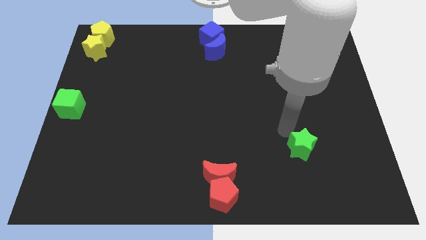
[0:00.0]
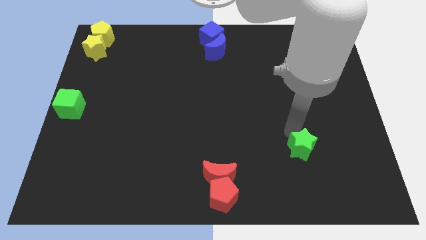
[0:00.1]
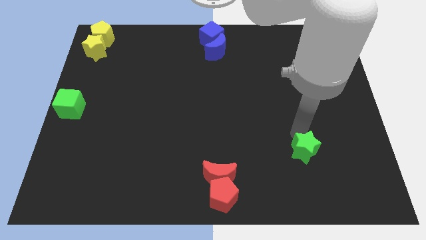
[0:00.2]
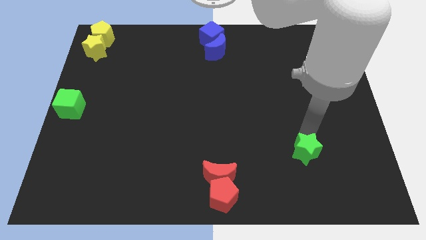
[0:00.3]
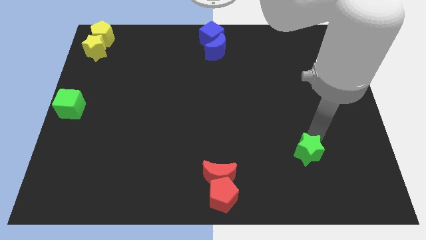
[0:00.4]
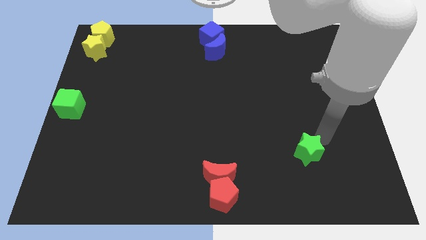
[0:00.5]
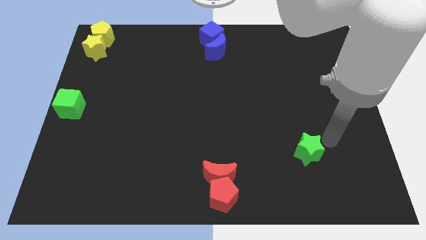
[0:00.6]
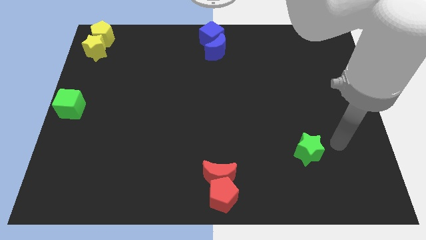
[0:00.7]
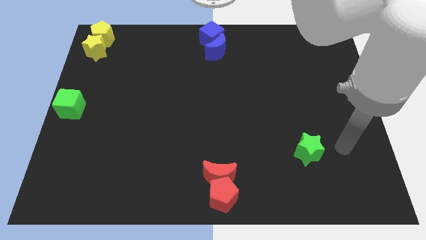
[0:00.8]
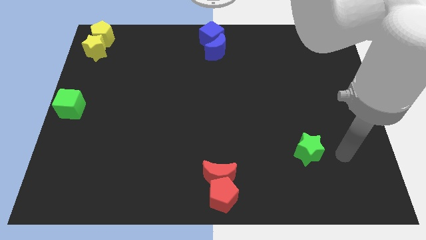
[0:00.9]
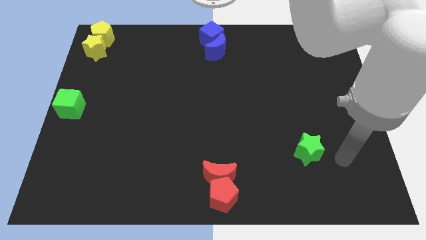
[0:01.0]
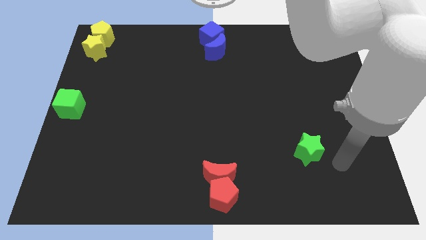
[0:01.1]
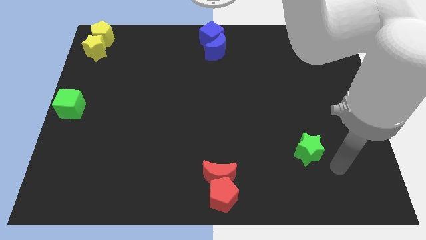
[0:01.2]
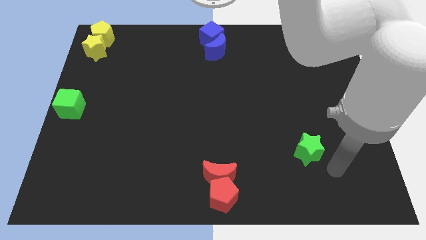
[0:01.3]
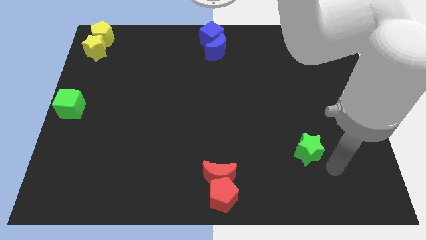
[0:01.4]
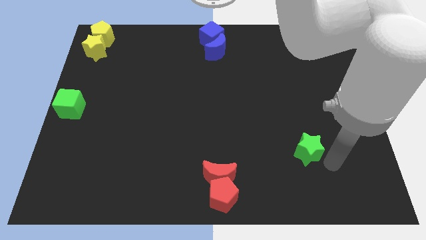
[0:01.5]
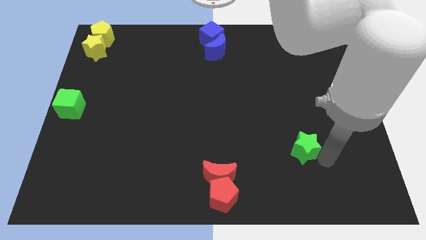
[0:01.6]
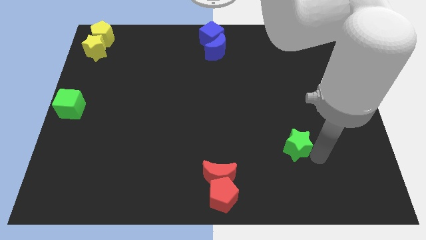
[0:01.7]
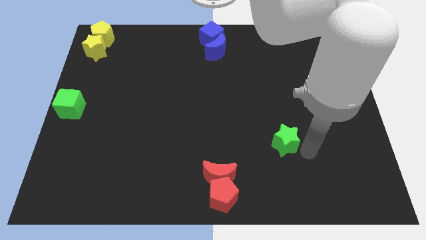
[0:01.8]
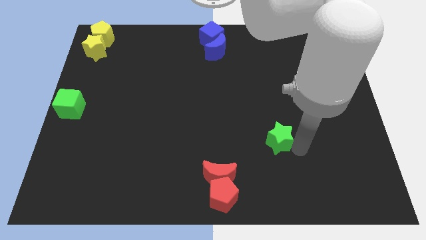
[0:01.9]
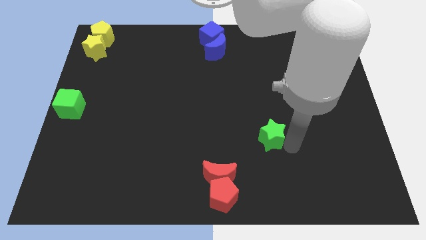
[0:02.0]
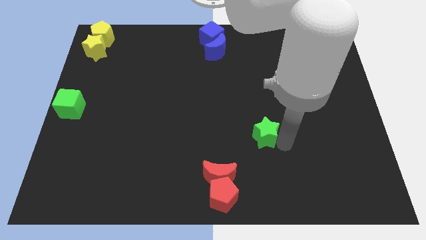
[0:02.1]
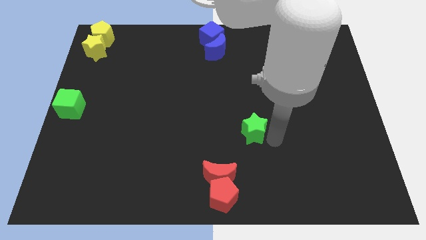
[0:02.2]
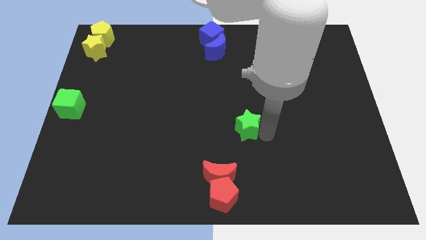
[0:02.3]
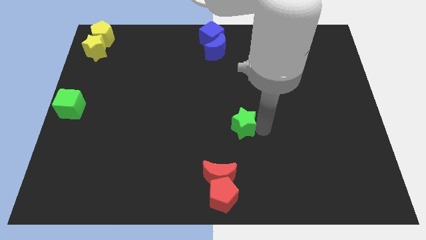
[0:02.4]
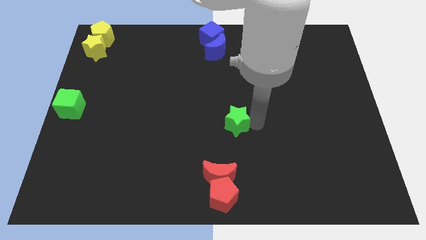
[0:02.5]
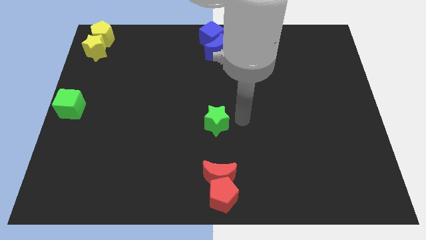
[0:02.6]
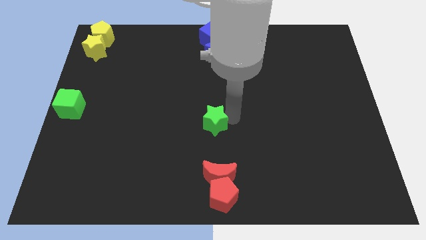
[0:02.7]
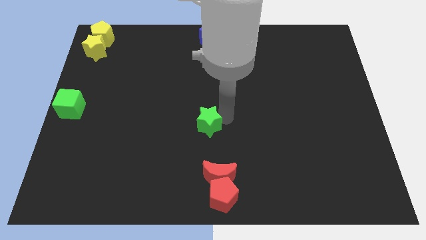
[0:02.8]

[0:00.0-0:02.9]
place the green star to the center of the board

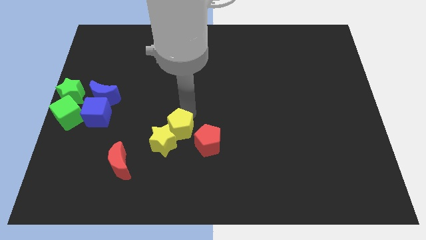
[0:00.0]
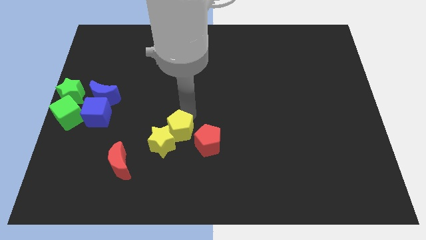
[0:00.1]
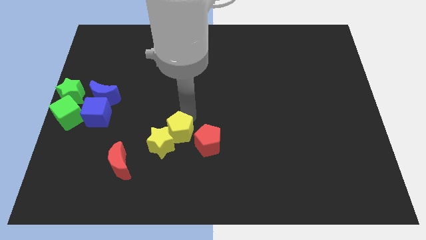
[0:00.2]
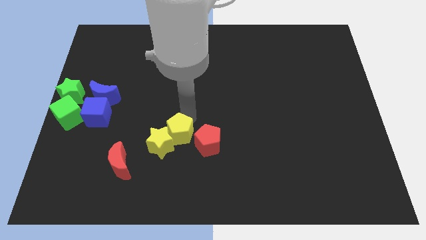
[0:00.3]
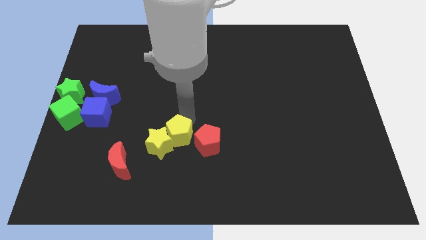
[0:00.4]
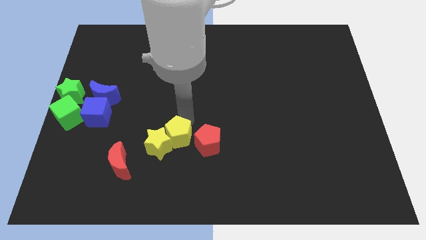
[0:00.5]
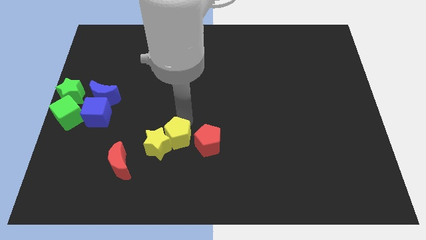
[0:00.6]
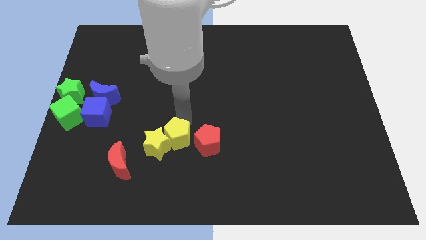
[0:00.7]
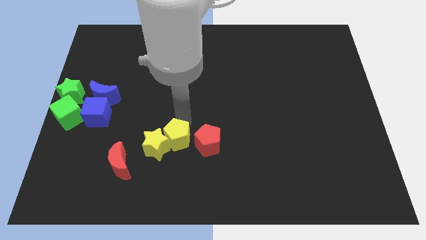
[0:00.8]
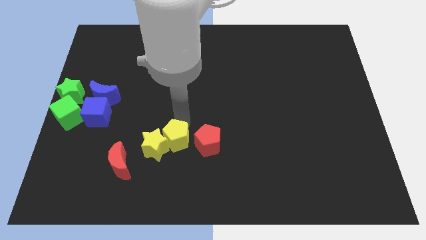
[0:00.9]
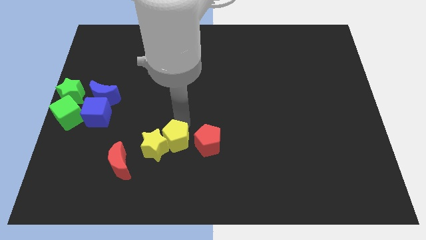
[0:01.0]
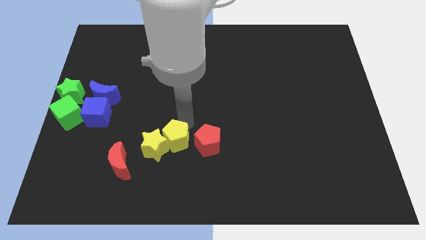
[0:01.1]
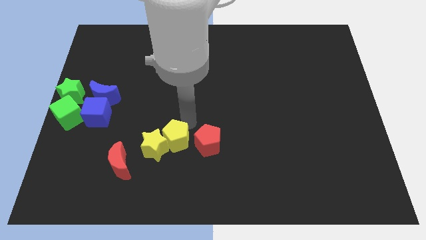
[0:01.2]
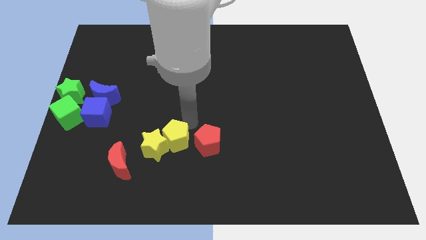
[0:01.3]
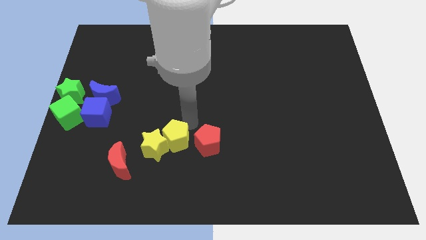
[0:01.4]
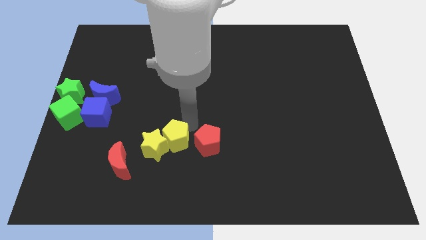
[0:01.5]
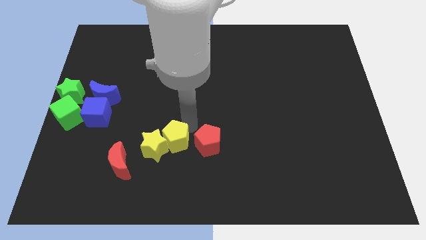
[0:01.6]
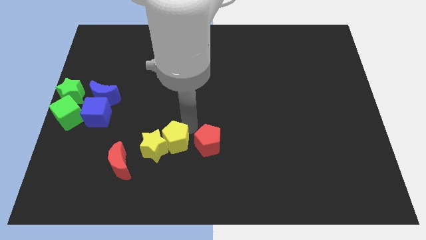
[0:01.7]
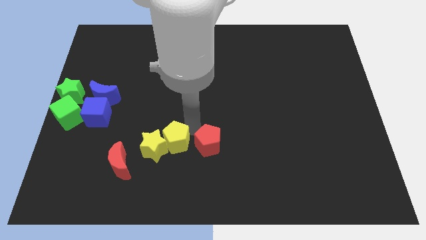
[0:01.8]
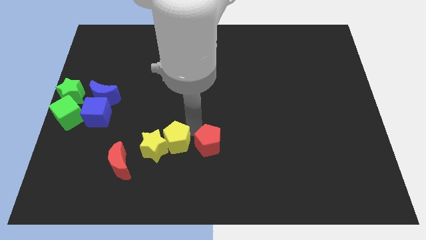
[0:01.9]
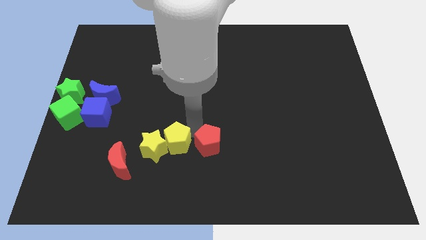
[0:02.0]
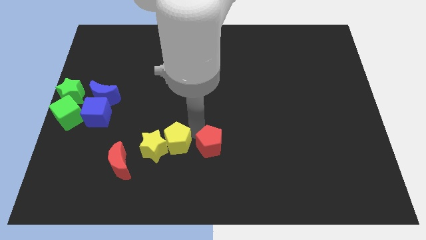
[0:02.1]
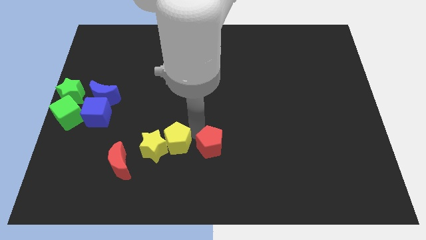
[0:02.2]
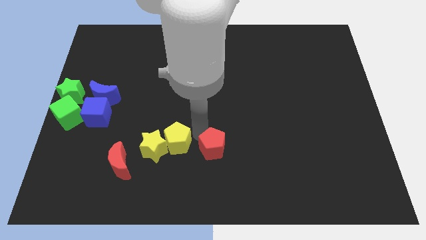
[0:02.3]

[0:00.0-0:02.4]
move yellow pentagon into yellow star

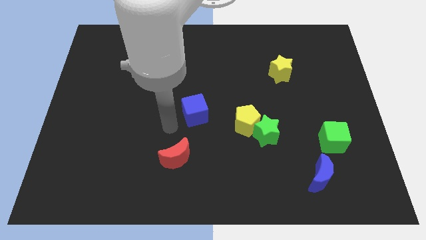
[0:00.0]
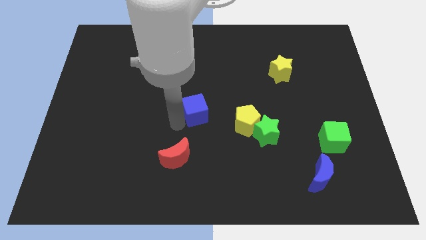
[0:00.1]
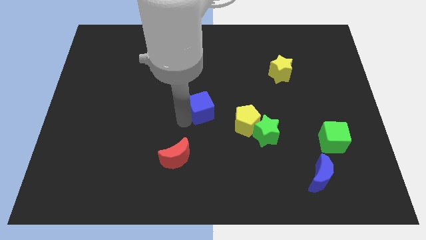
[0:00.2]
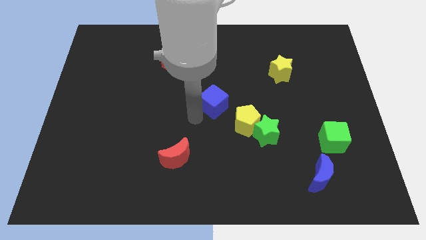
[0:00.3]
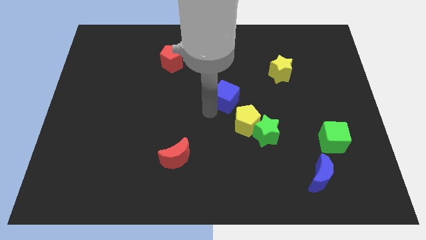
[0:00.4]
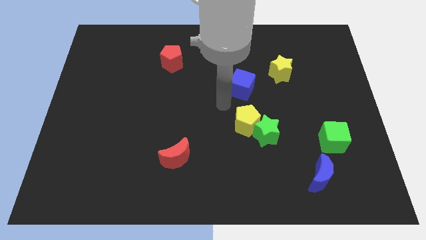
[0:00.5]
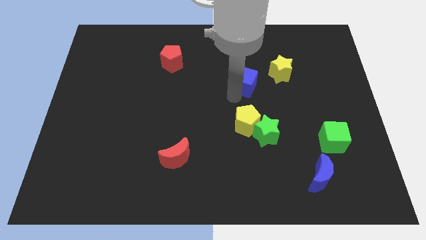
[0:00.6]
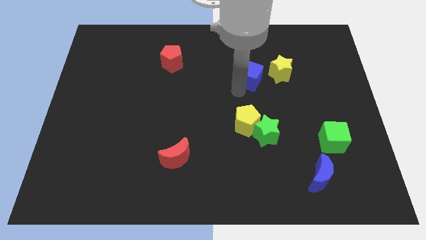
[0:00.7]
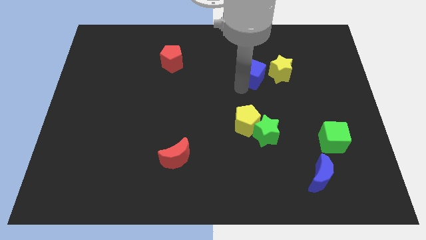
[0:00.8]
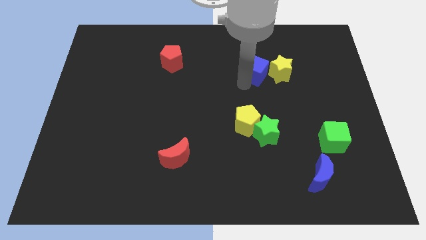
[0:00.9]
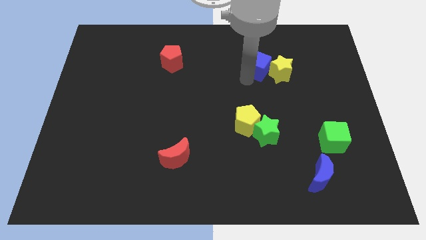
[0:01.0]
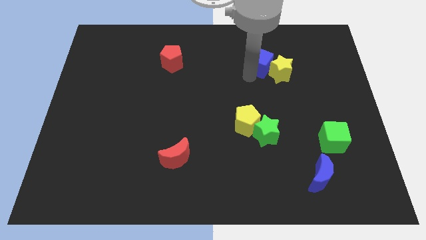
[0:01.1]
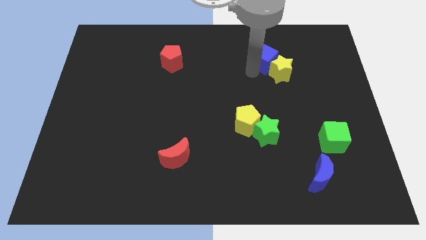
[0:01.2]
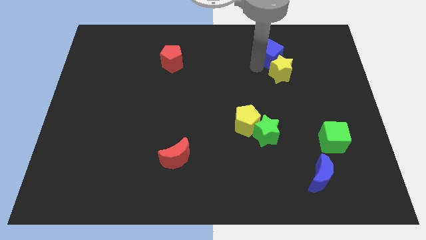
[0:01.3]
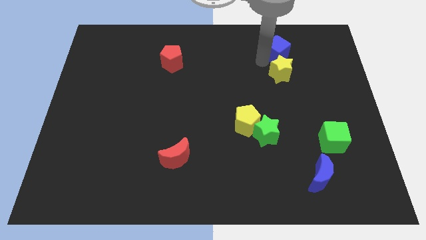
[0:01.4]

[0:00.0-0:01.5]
push the blue cube to the top of the yellow star

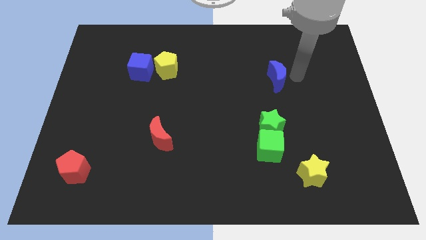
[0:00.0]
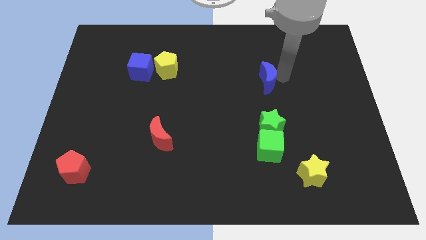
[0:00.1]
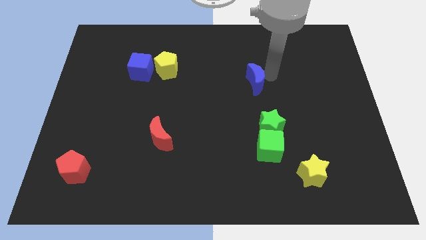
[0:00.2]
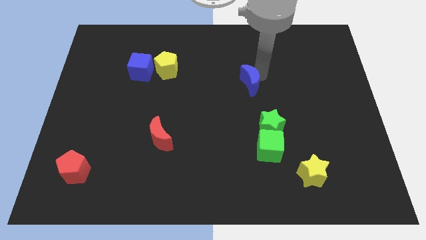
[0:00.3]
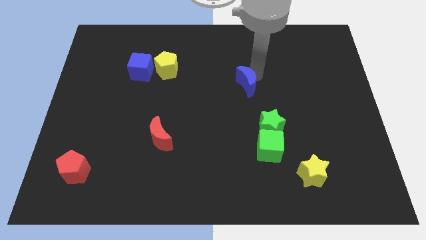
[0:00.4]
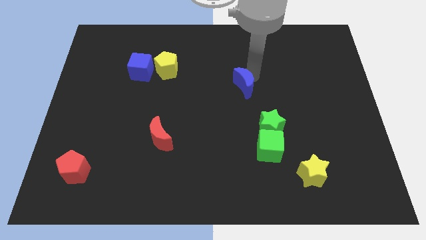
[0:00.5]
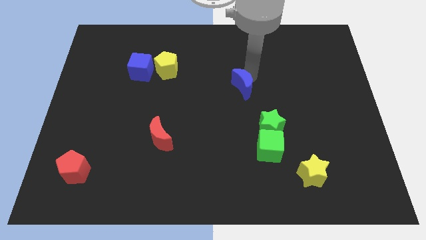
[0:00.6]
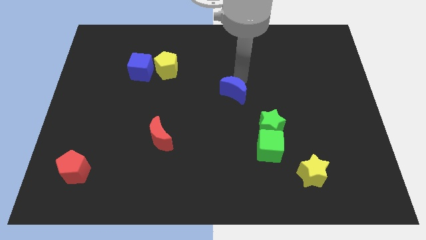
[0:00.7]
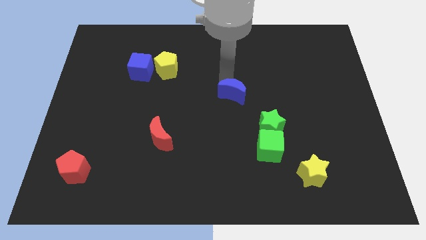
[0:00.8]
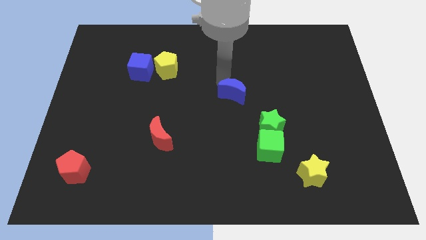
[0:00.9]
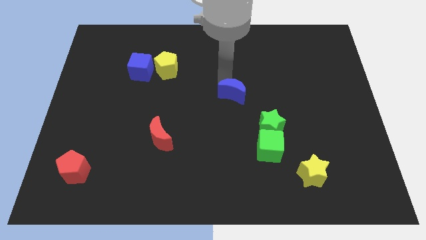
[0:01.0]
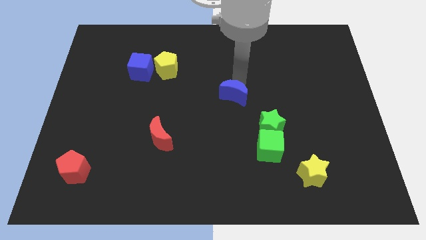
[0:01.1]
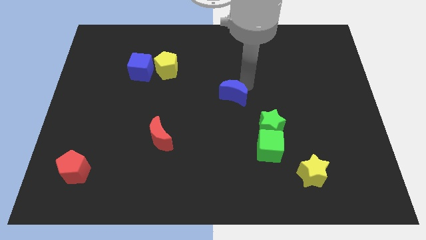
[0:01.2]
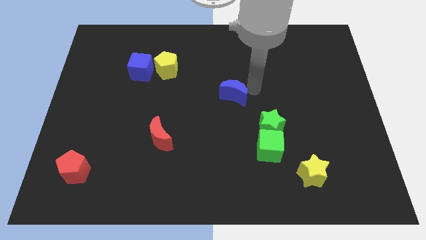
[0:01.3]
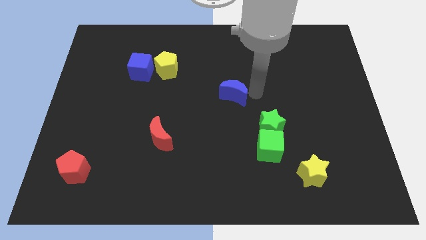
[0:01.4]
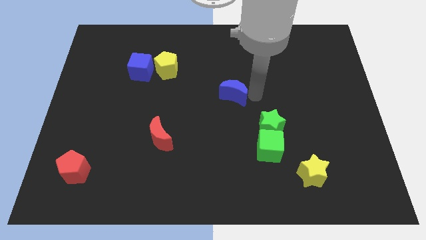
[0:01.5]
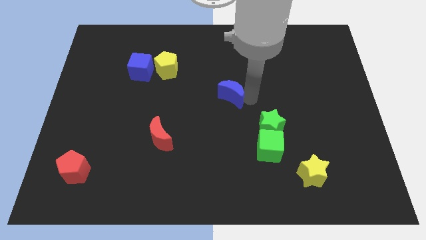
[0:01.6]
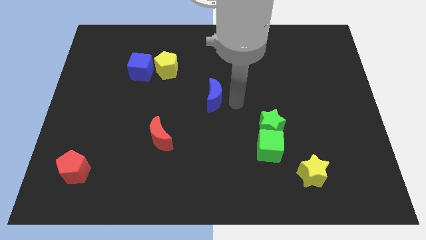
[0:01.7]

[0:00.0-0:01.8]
move the blue crescent diagonal to the red crescent

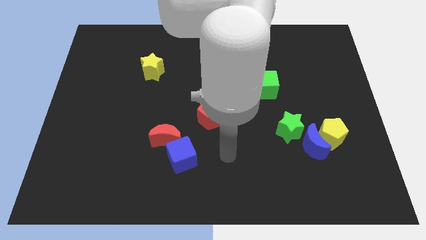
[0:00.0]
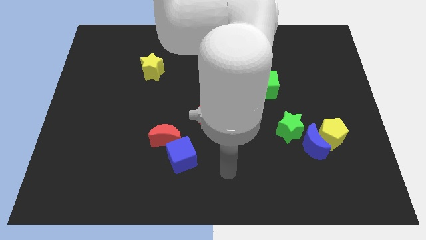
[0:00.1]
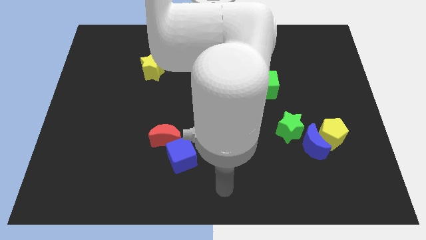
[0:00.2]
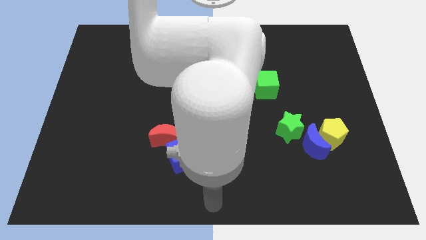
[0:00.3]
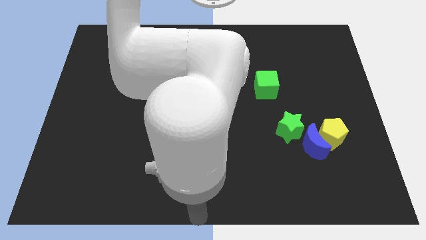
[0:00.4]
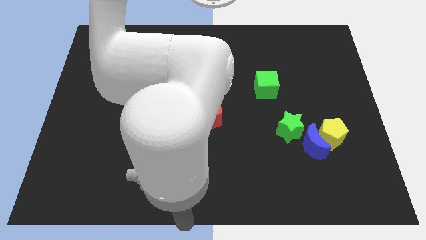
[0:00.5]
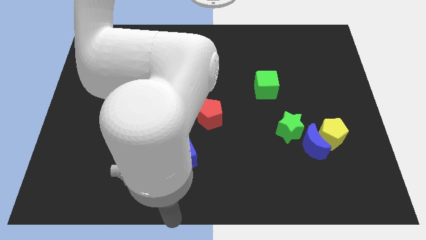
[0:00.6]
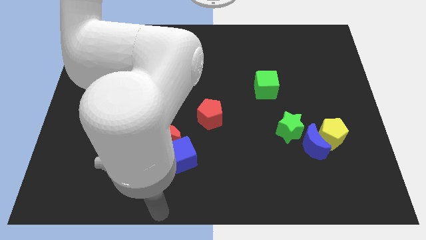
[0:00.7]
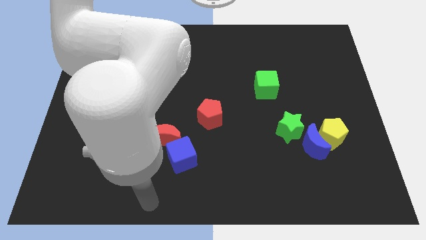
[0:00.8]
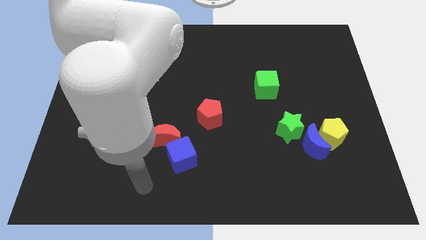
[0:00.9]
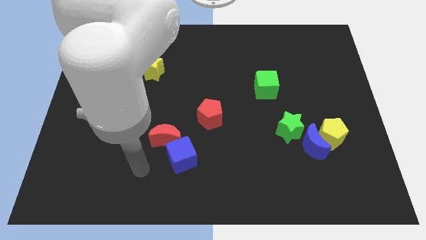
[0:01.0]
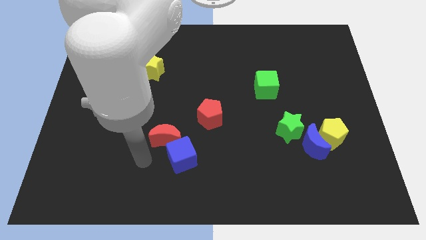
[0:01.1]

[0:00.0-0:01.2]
move arm to the left of blue cube
